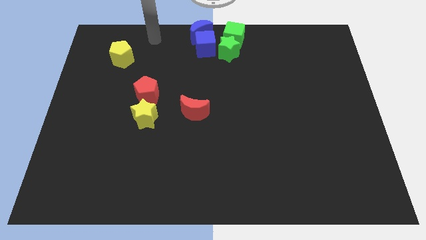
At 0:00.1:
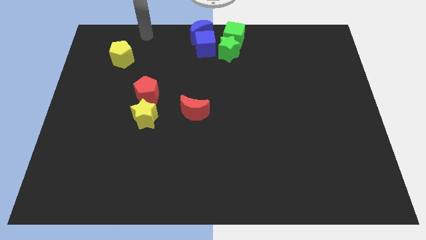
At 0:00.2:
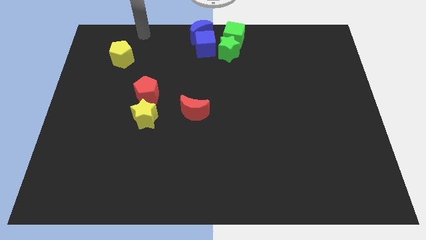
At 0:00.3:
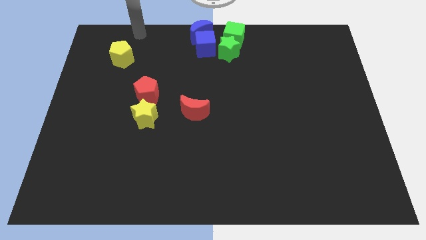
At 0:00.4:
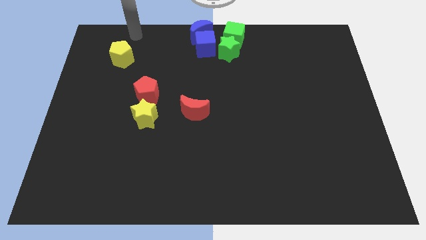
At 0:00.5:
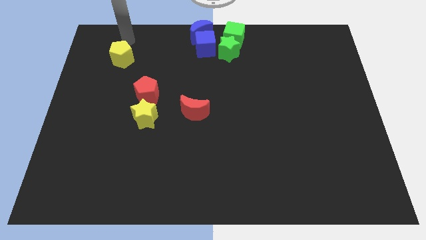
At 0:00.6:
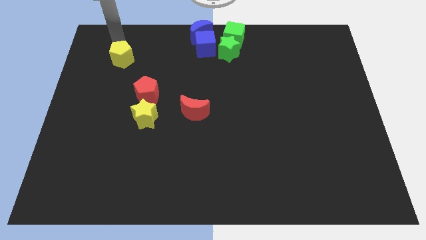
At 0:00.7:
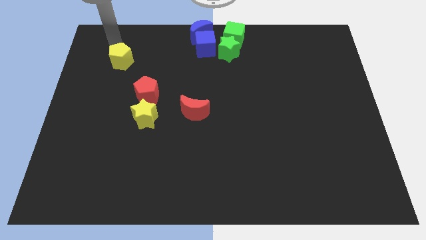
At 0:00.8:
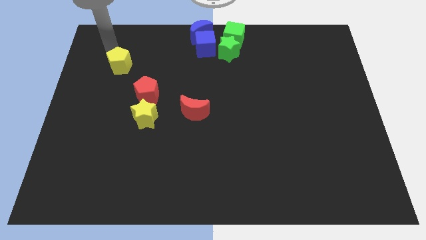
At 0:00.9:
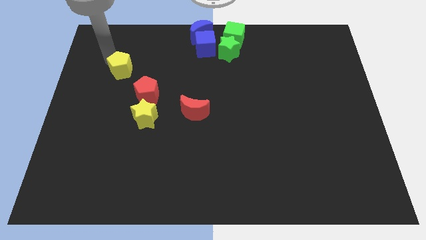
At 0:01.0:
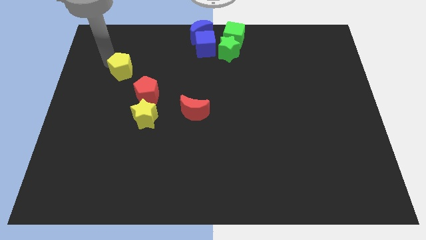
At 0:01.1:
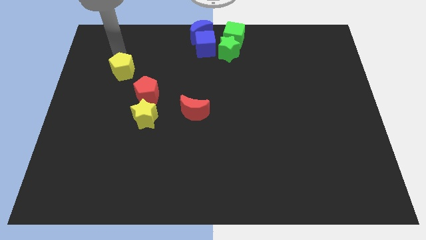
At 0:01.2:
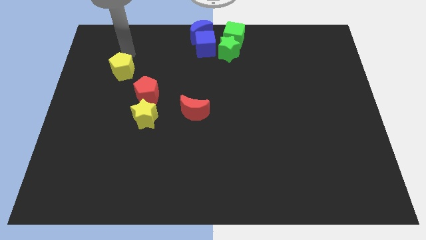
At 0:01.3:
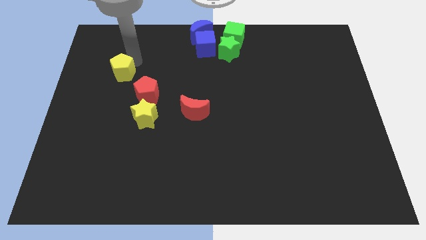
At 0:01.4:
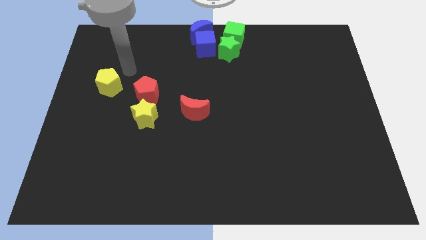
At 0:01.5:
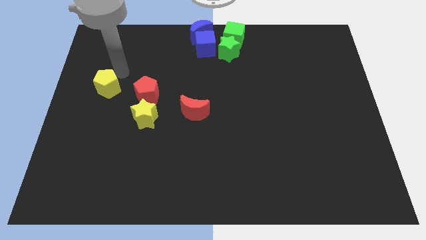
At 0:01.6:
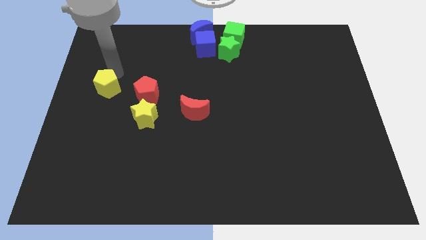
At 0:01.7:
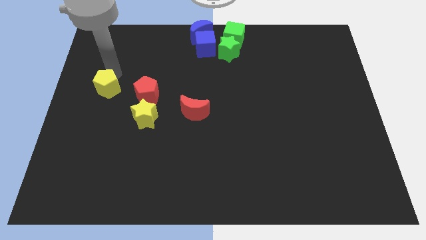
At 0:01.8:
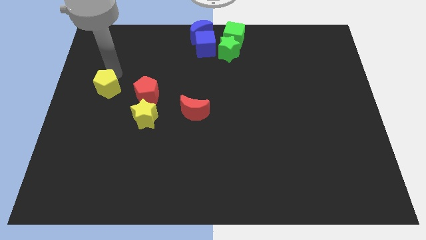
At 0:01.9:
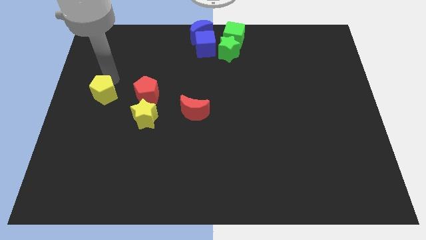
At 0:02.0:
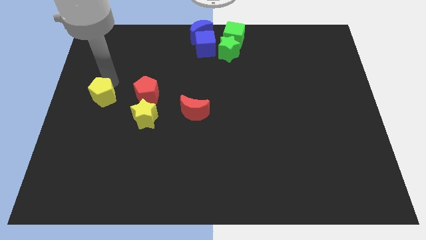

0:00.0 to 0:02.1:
place the yellow pentagon left to the red pentagon

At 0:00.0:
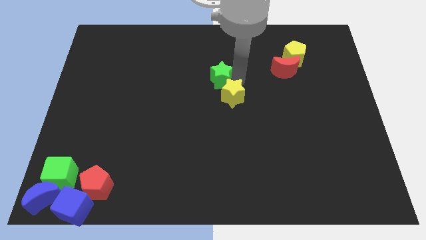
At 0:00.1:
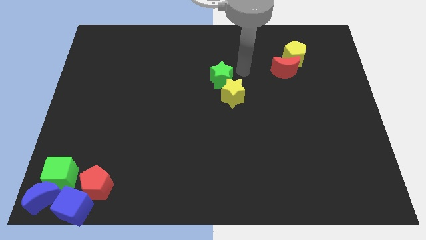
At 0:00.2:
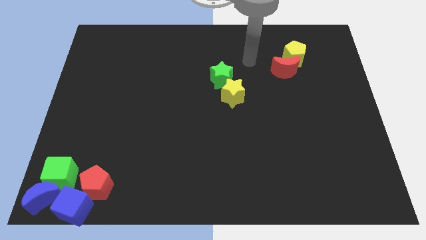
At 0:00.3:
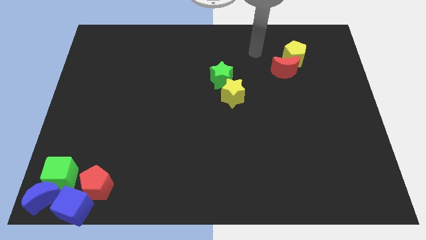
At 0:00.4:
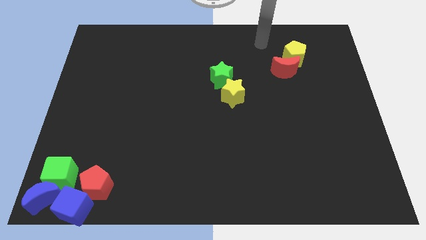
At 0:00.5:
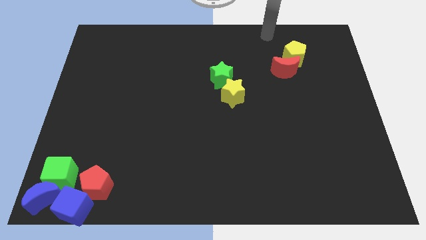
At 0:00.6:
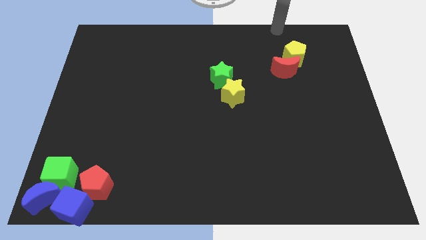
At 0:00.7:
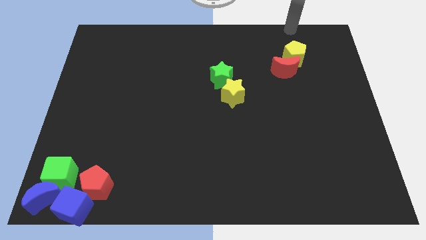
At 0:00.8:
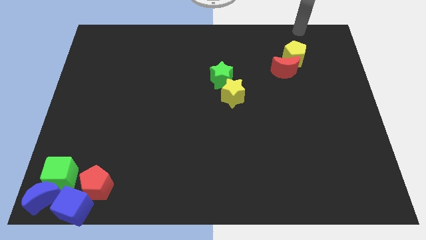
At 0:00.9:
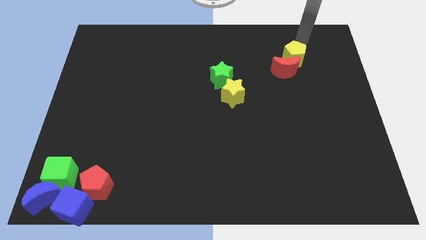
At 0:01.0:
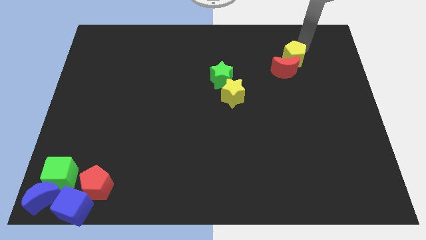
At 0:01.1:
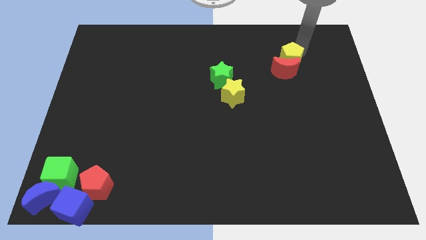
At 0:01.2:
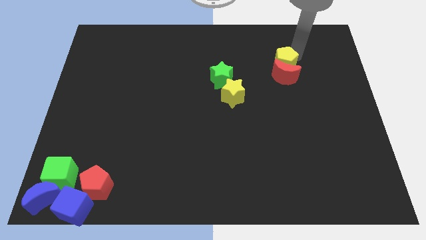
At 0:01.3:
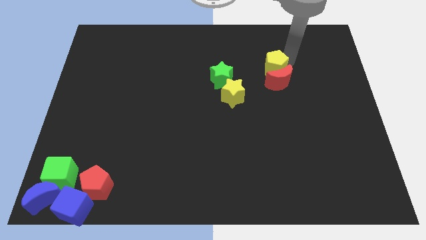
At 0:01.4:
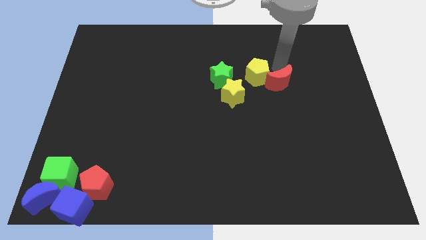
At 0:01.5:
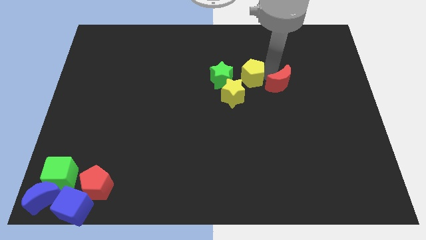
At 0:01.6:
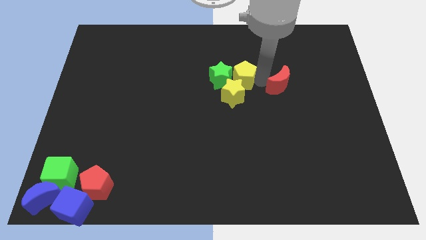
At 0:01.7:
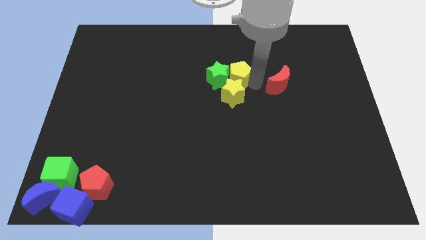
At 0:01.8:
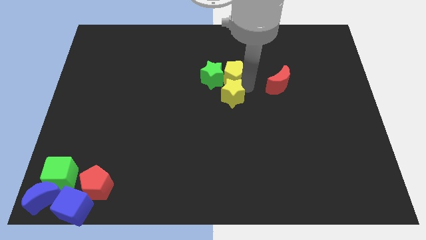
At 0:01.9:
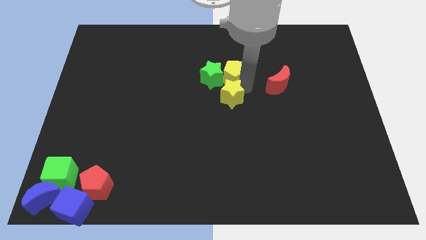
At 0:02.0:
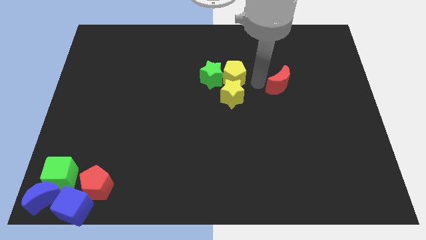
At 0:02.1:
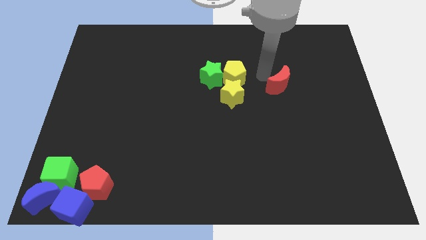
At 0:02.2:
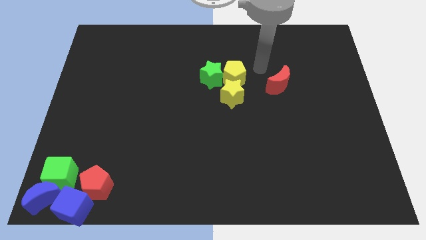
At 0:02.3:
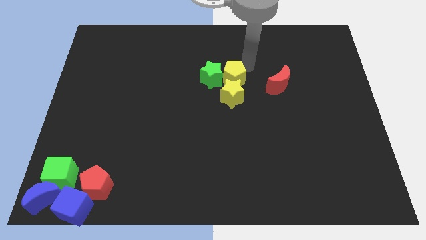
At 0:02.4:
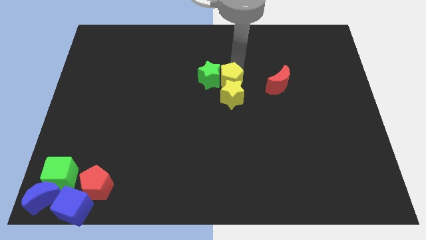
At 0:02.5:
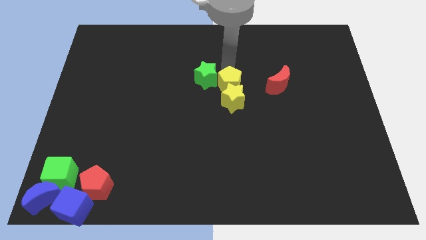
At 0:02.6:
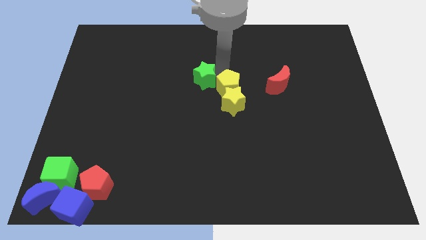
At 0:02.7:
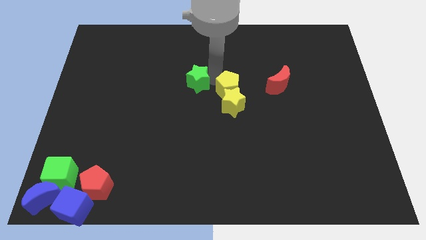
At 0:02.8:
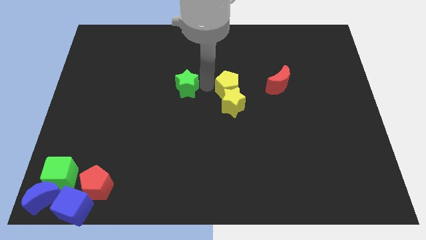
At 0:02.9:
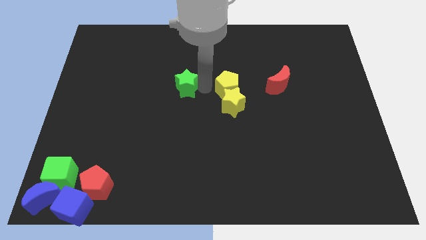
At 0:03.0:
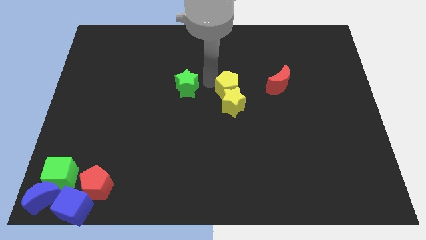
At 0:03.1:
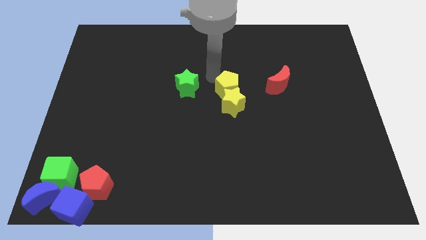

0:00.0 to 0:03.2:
separate the yellow pentagon from the red crescent

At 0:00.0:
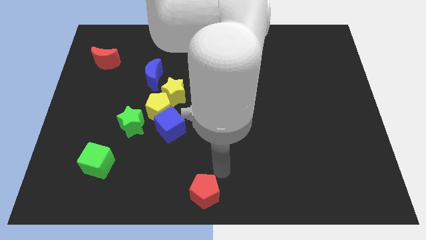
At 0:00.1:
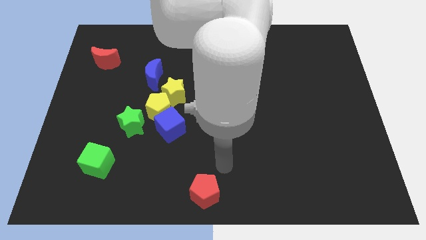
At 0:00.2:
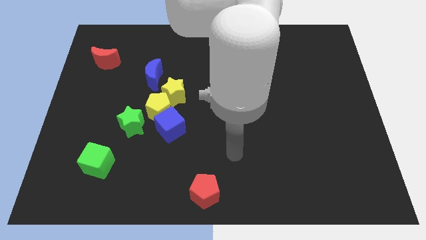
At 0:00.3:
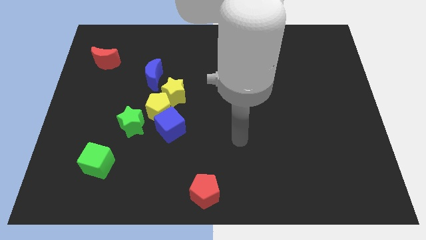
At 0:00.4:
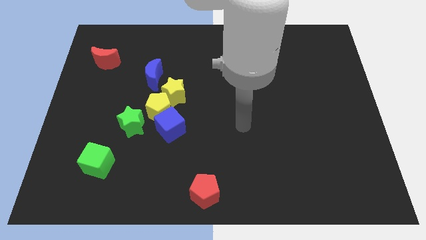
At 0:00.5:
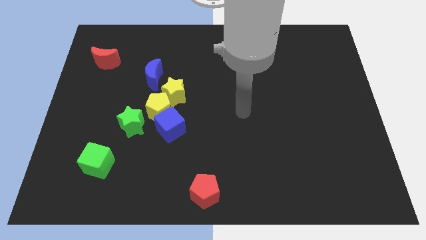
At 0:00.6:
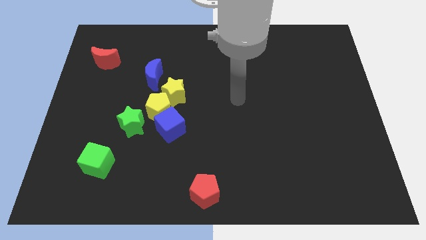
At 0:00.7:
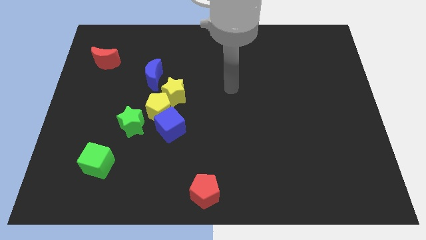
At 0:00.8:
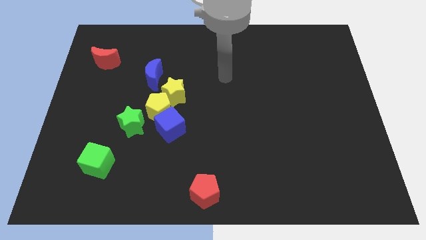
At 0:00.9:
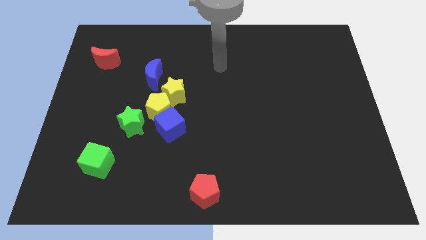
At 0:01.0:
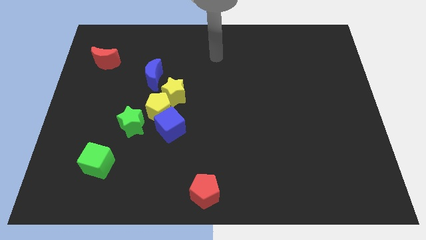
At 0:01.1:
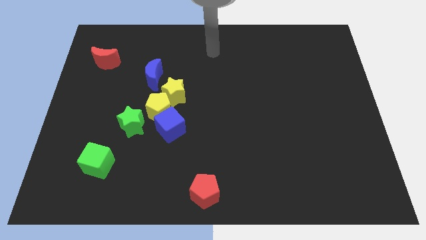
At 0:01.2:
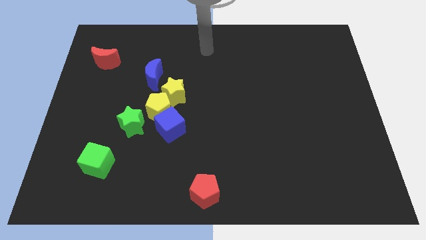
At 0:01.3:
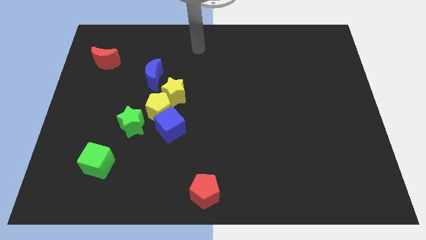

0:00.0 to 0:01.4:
move arm to the center top

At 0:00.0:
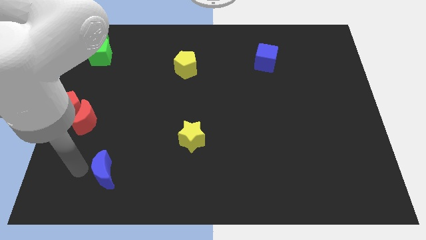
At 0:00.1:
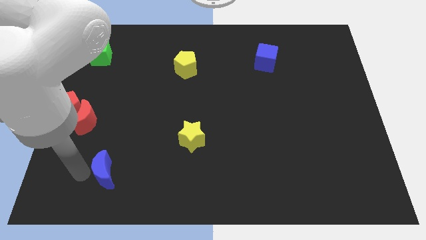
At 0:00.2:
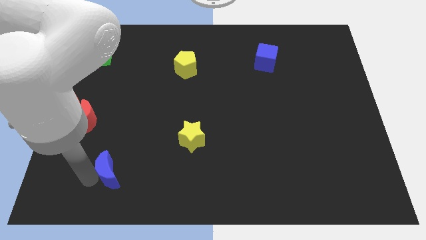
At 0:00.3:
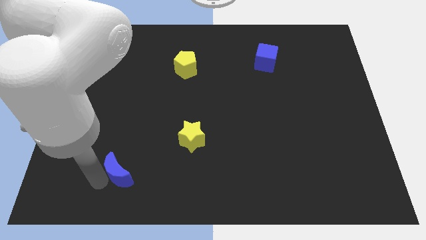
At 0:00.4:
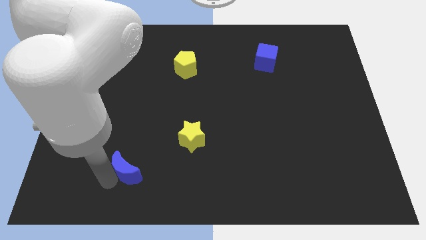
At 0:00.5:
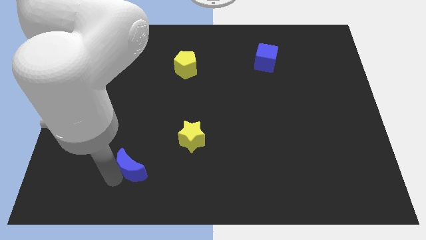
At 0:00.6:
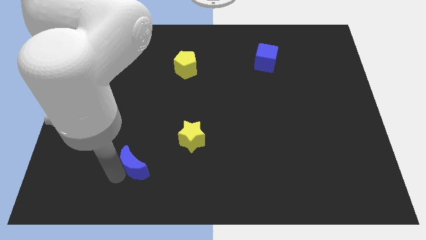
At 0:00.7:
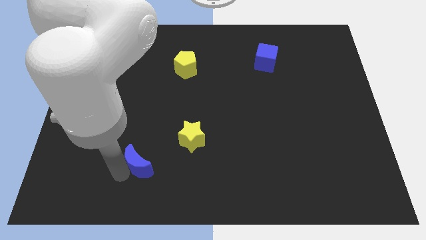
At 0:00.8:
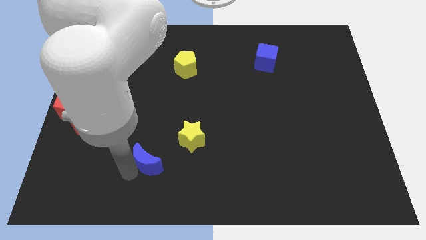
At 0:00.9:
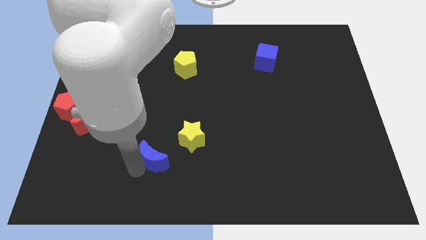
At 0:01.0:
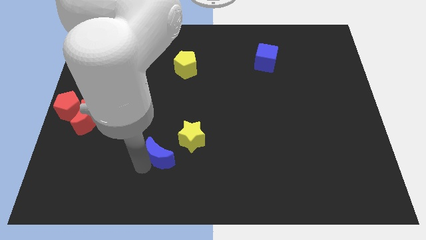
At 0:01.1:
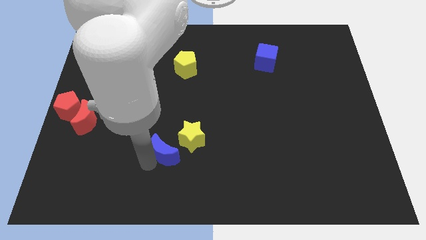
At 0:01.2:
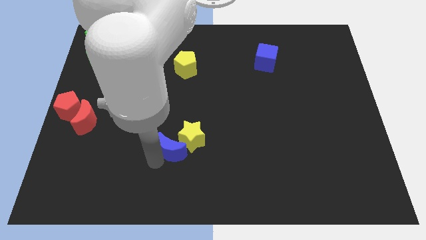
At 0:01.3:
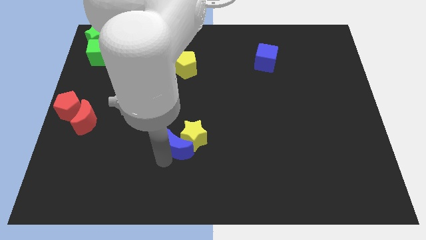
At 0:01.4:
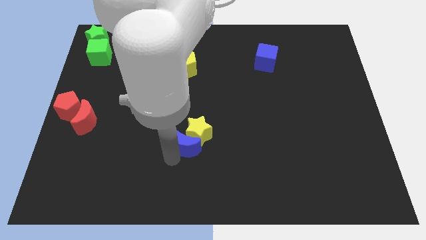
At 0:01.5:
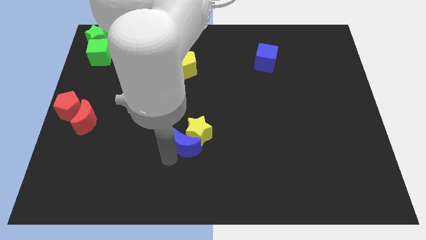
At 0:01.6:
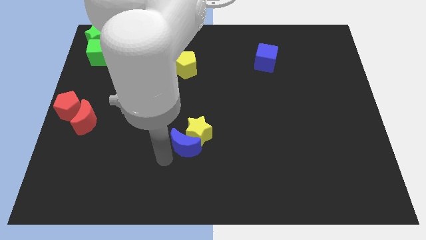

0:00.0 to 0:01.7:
move the blue crescent into the yellow star

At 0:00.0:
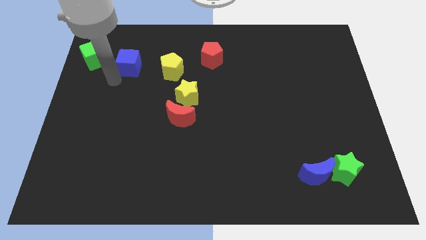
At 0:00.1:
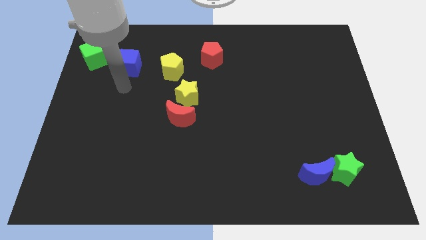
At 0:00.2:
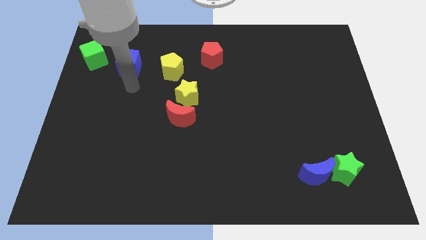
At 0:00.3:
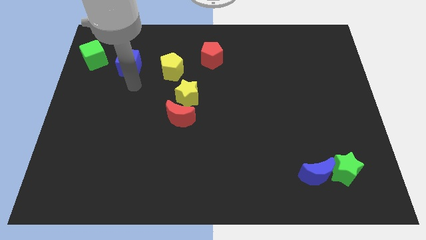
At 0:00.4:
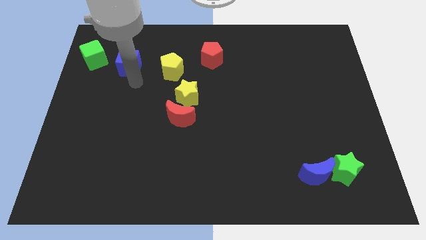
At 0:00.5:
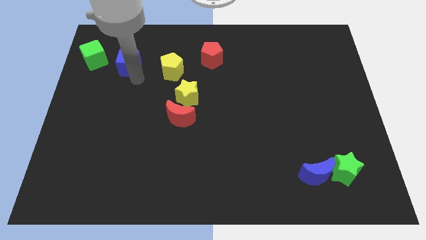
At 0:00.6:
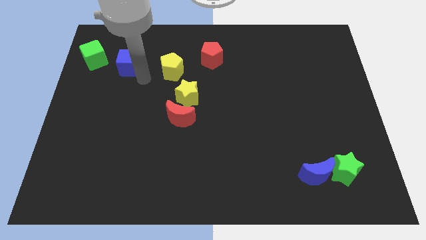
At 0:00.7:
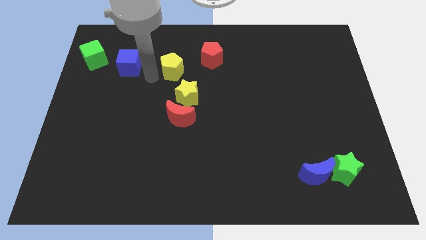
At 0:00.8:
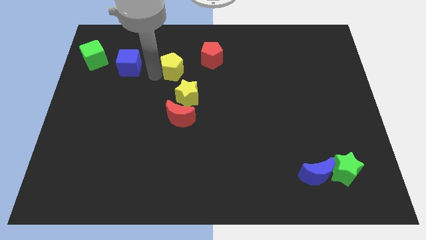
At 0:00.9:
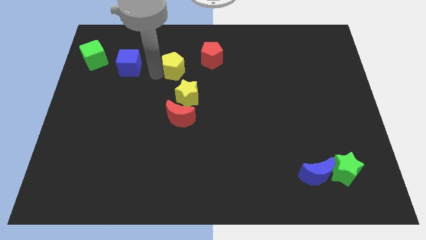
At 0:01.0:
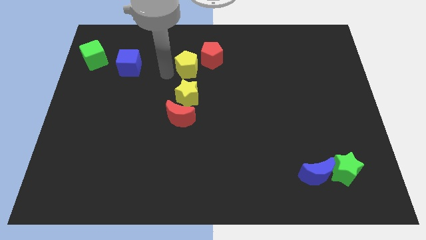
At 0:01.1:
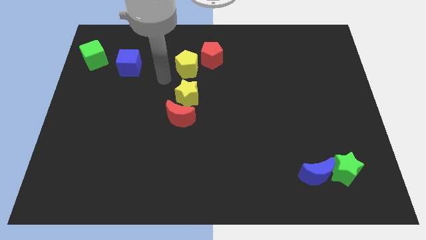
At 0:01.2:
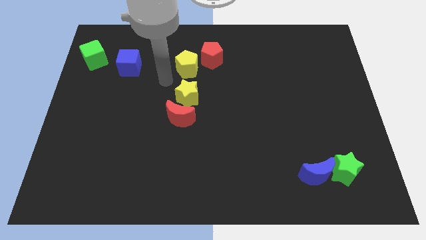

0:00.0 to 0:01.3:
push the yellow pentagon towards the red pentagon
